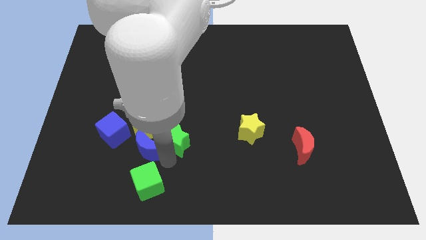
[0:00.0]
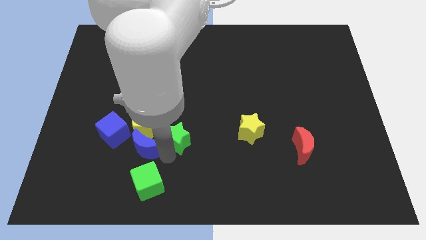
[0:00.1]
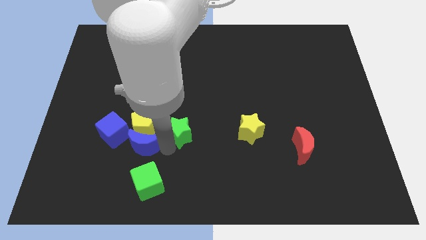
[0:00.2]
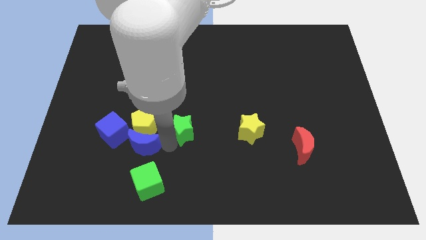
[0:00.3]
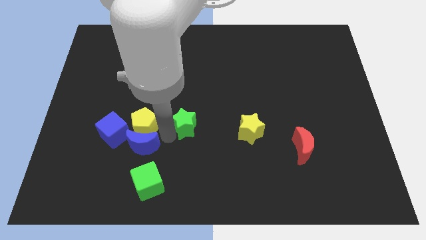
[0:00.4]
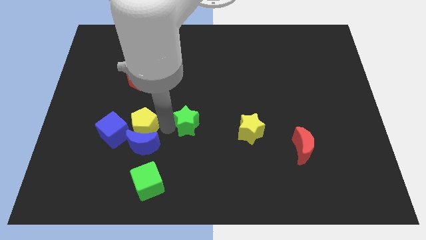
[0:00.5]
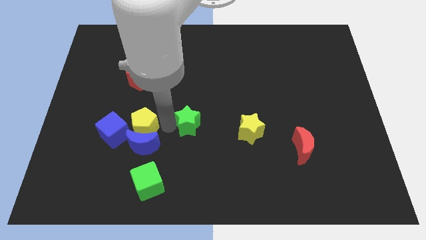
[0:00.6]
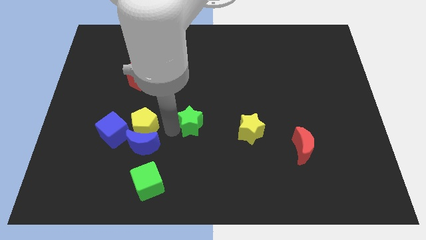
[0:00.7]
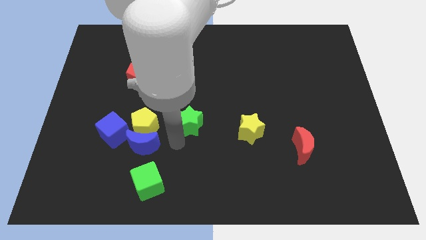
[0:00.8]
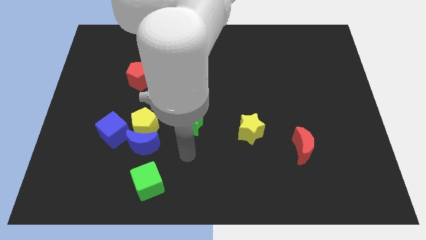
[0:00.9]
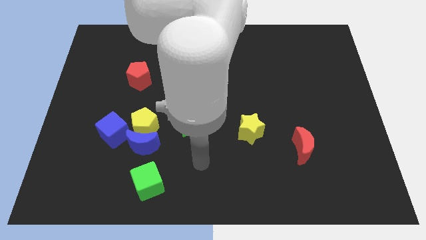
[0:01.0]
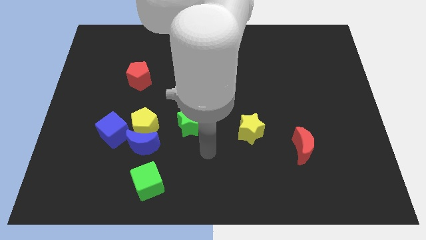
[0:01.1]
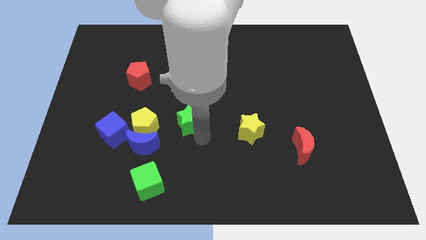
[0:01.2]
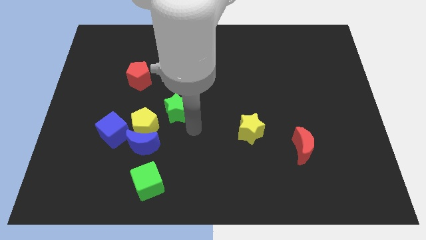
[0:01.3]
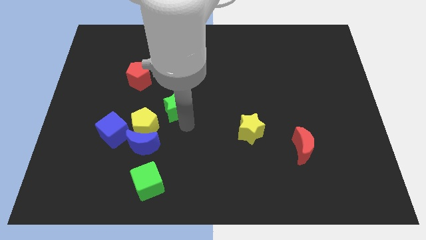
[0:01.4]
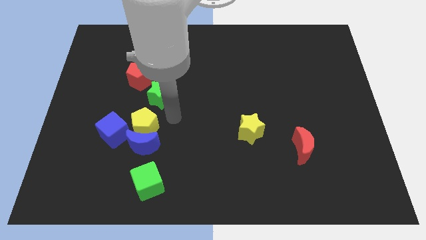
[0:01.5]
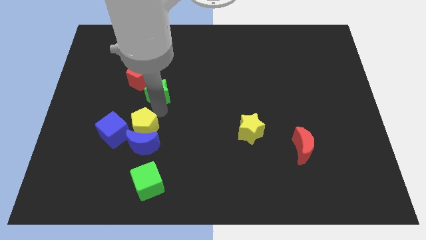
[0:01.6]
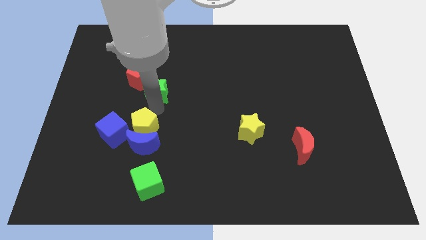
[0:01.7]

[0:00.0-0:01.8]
push the green star towards red pentagon

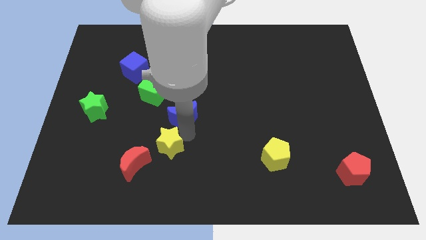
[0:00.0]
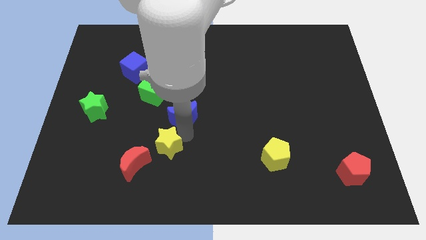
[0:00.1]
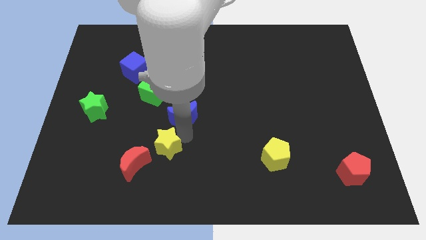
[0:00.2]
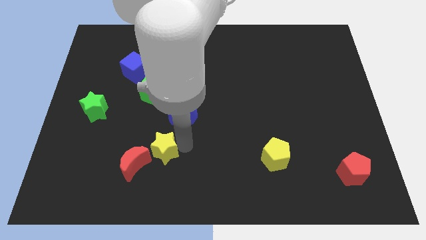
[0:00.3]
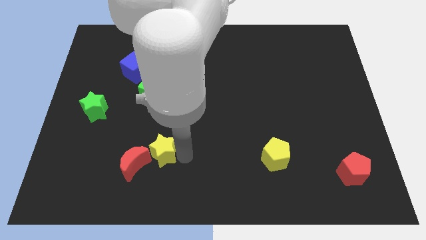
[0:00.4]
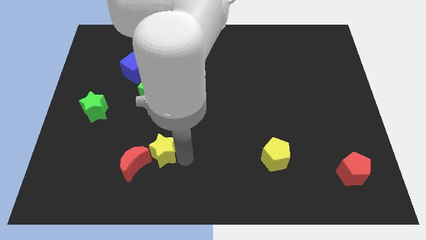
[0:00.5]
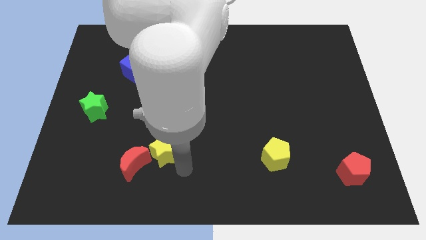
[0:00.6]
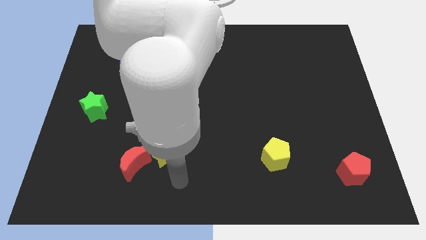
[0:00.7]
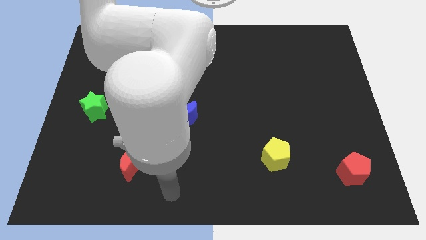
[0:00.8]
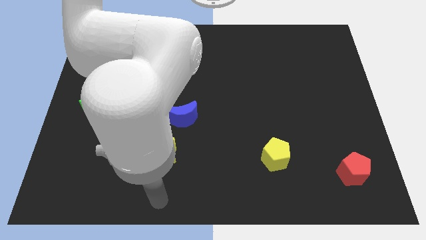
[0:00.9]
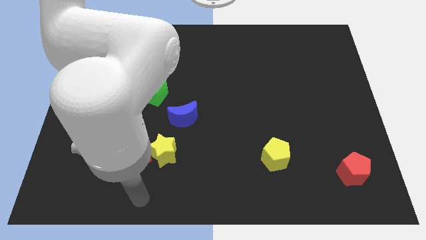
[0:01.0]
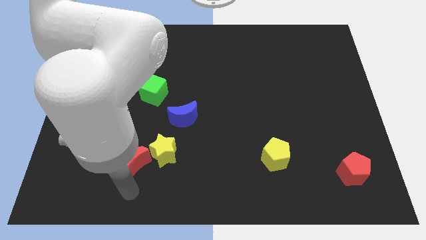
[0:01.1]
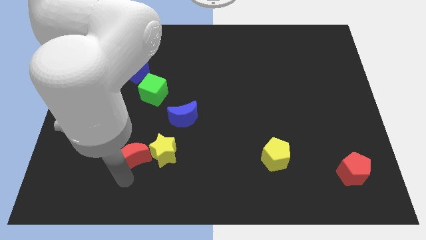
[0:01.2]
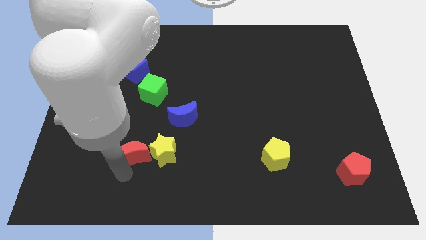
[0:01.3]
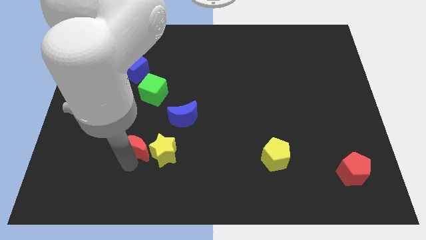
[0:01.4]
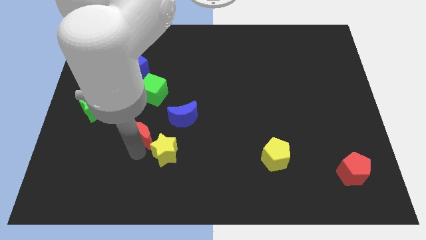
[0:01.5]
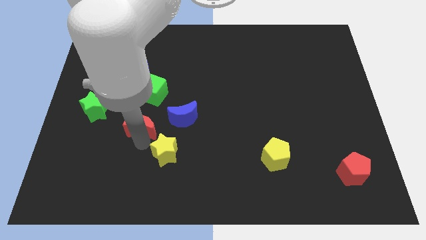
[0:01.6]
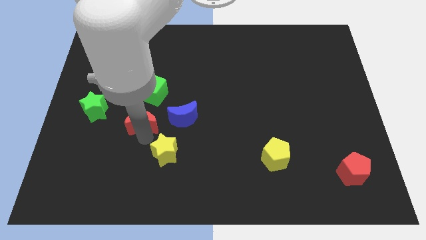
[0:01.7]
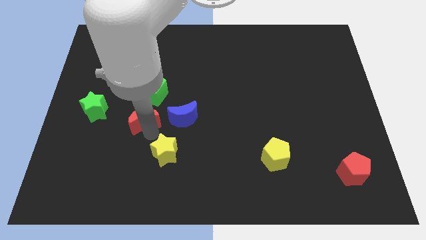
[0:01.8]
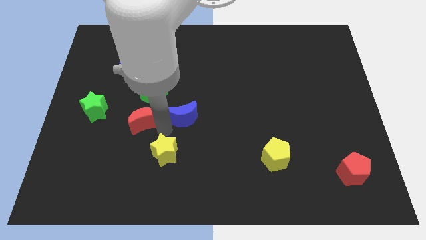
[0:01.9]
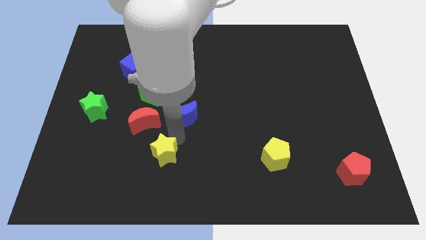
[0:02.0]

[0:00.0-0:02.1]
push the red mon to the left of the blue moon

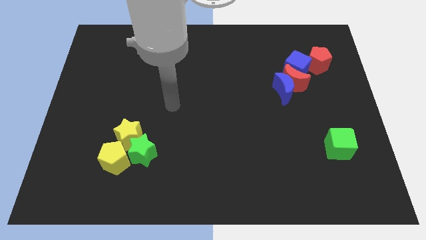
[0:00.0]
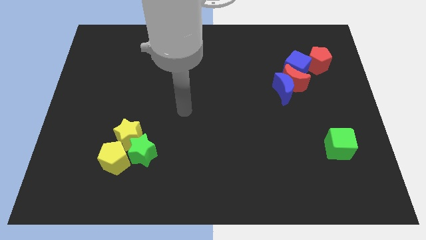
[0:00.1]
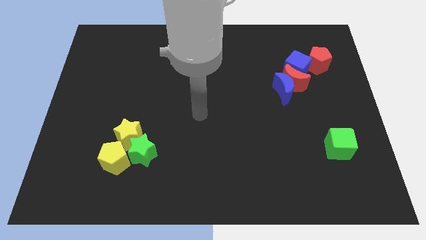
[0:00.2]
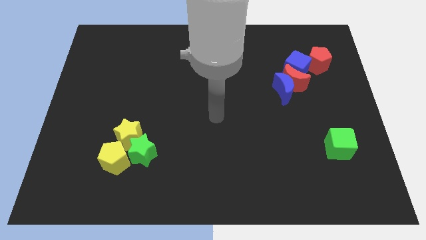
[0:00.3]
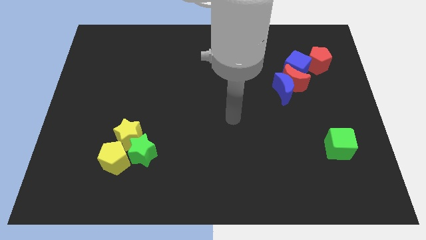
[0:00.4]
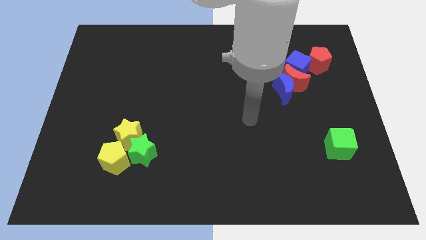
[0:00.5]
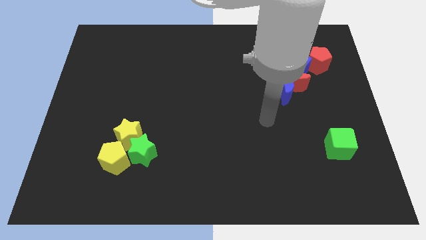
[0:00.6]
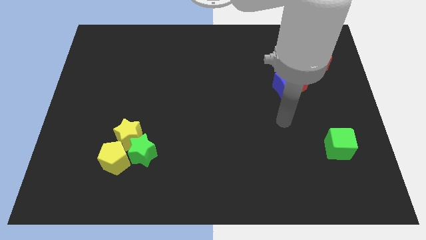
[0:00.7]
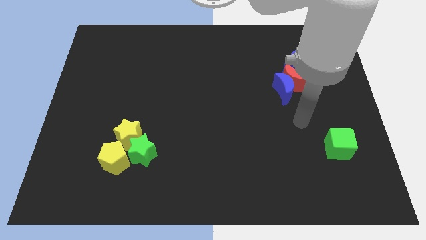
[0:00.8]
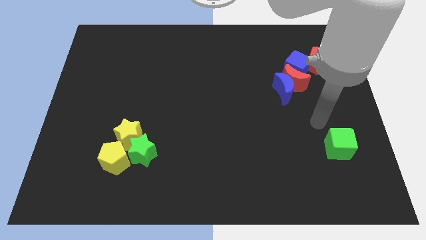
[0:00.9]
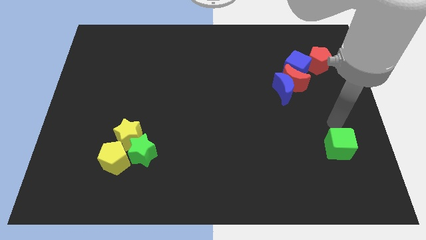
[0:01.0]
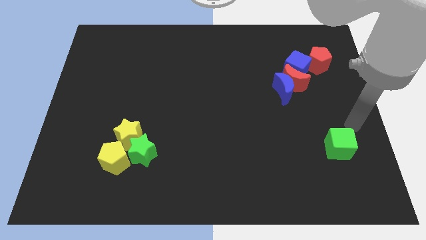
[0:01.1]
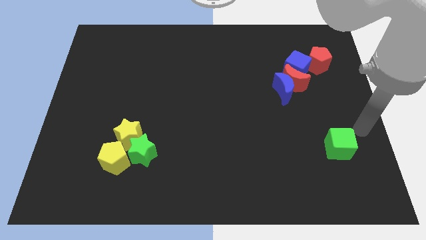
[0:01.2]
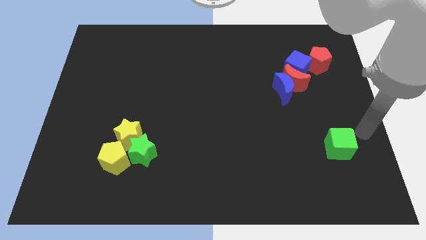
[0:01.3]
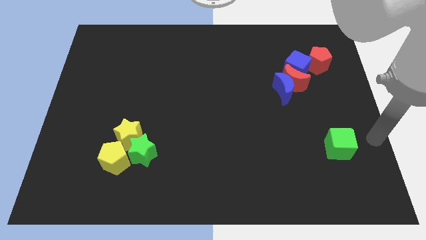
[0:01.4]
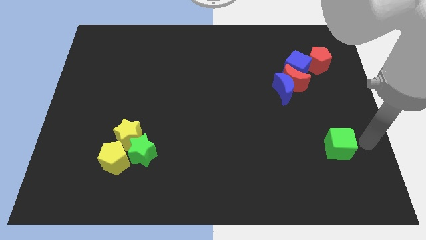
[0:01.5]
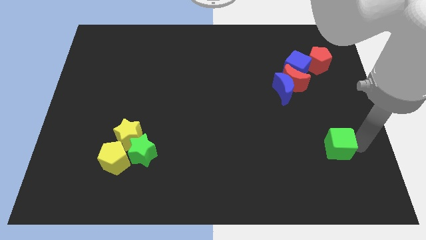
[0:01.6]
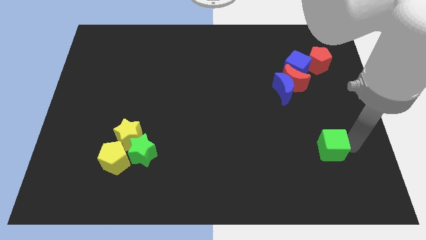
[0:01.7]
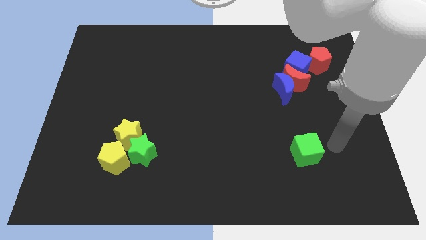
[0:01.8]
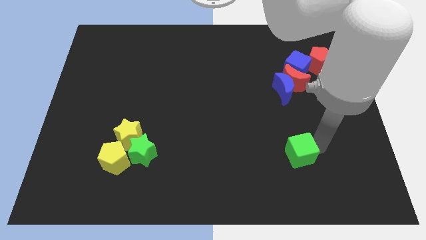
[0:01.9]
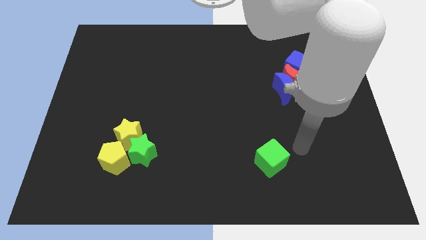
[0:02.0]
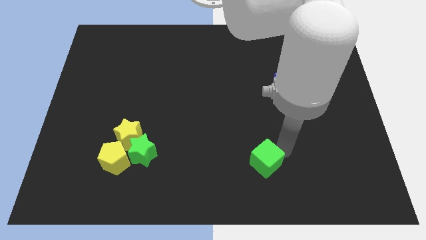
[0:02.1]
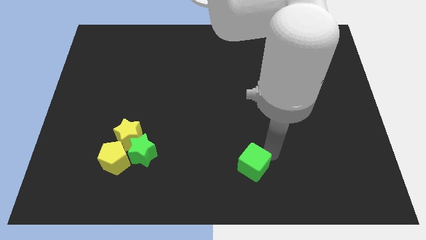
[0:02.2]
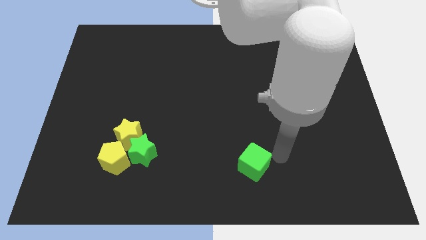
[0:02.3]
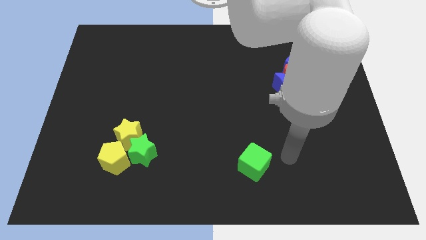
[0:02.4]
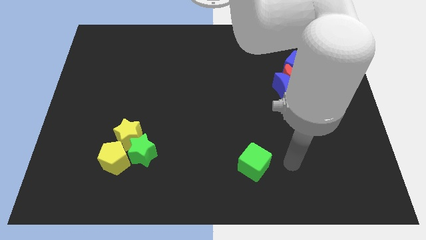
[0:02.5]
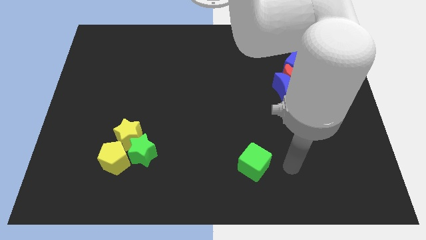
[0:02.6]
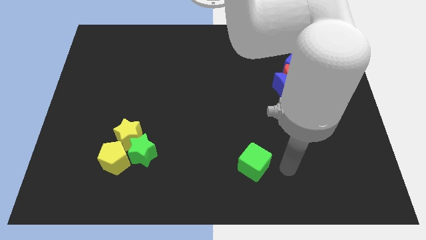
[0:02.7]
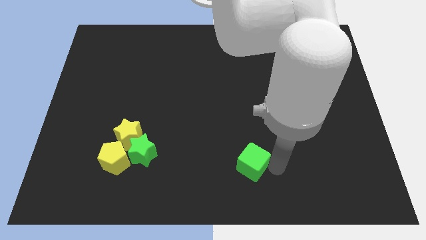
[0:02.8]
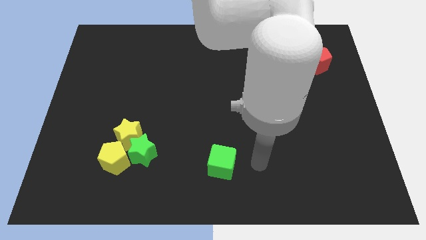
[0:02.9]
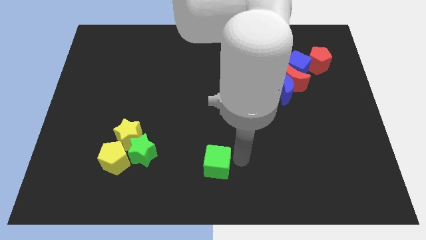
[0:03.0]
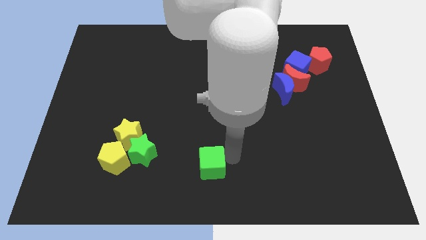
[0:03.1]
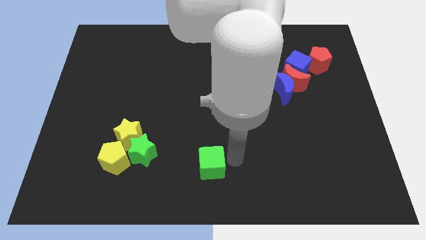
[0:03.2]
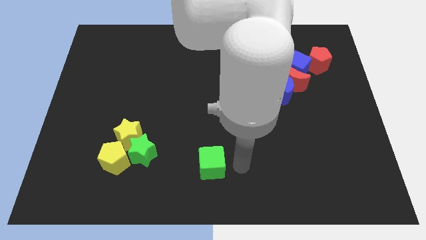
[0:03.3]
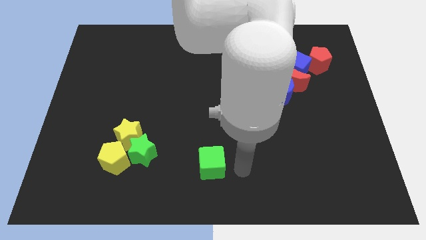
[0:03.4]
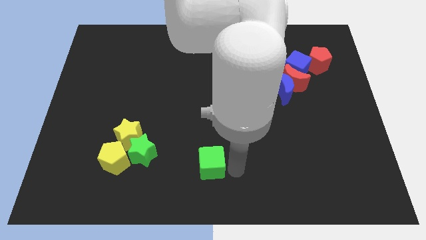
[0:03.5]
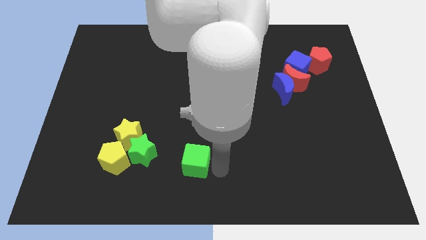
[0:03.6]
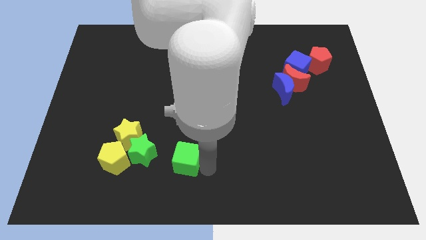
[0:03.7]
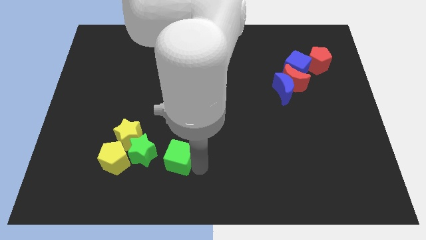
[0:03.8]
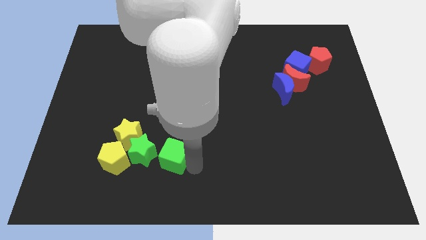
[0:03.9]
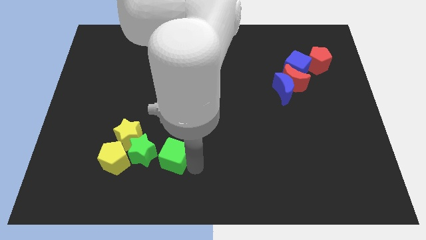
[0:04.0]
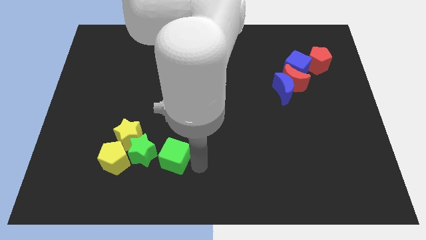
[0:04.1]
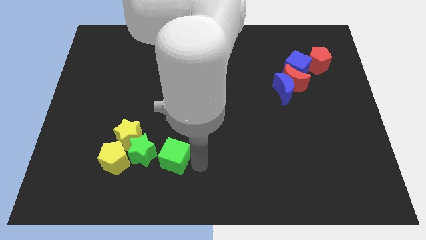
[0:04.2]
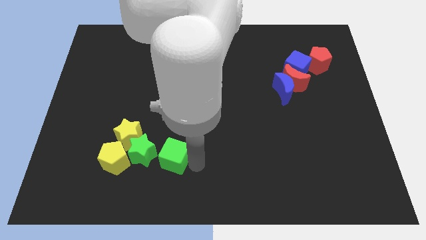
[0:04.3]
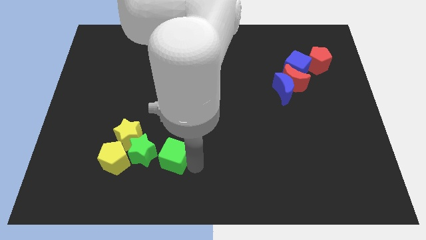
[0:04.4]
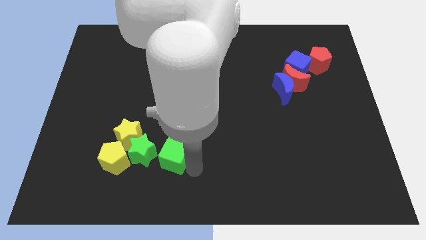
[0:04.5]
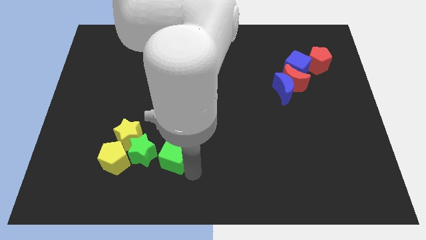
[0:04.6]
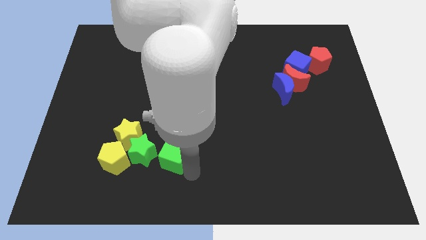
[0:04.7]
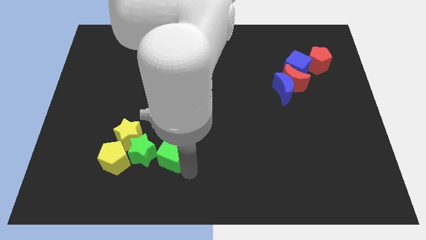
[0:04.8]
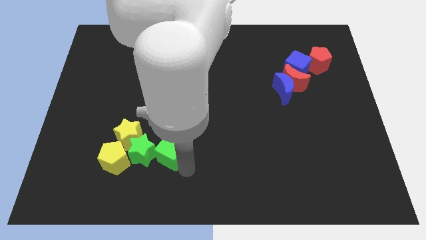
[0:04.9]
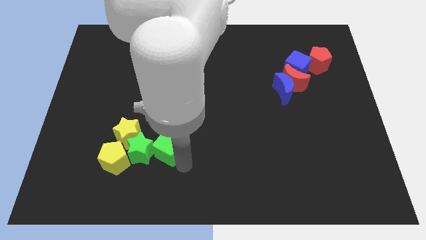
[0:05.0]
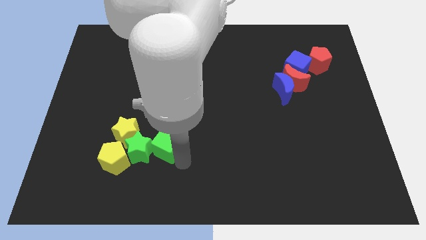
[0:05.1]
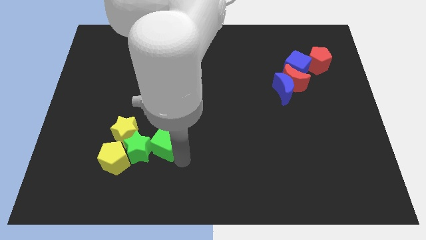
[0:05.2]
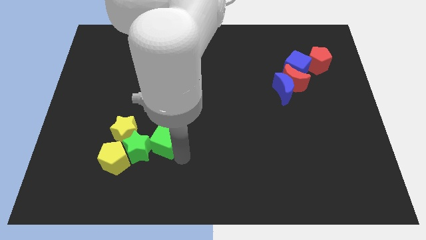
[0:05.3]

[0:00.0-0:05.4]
move the green cube into the green star
